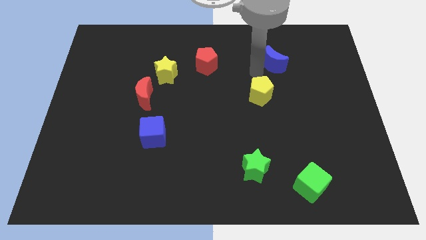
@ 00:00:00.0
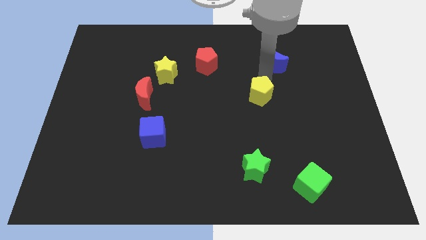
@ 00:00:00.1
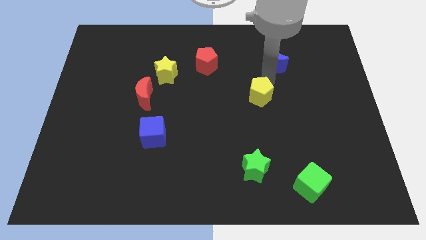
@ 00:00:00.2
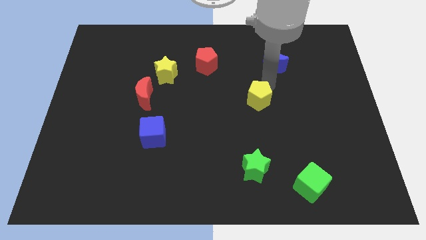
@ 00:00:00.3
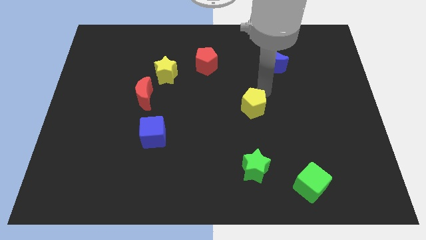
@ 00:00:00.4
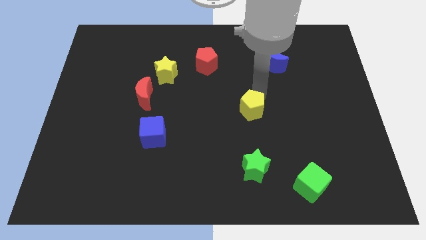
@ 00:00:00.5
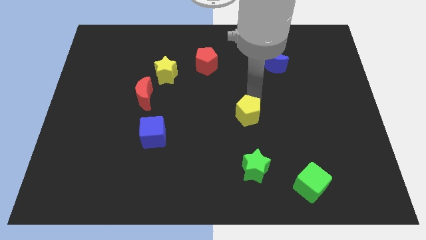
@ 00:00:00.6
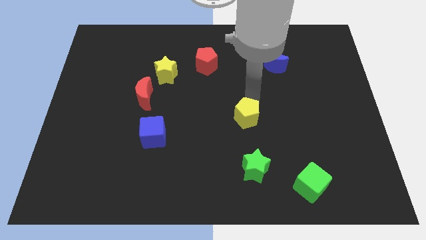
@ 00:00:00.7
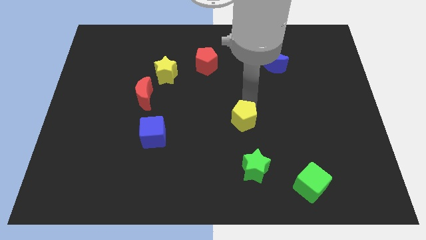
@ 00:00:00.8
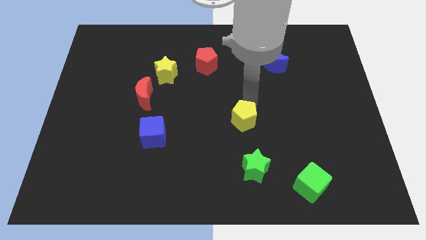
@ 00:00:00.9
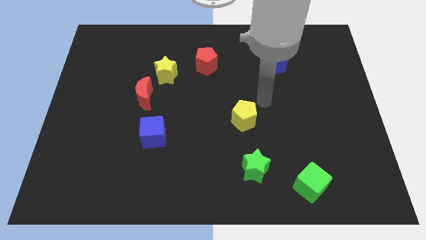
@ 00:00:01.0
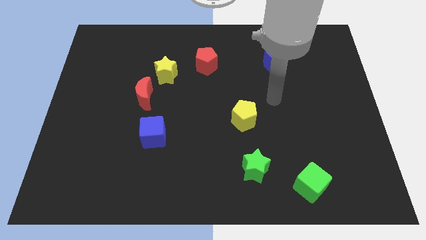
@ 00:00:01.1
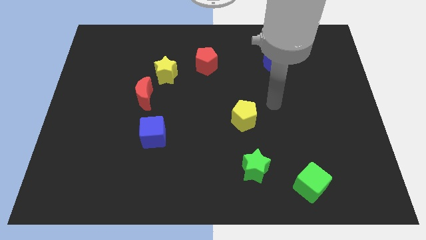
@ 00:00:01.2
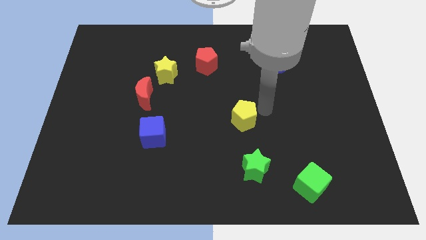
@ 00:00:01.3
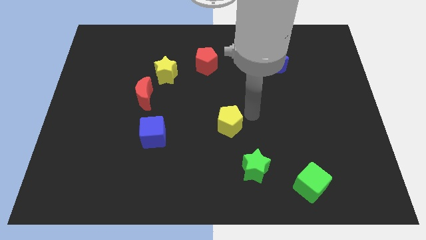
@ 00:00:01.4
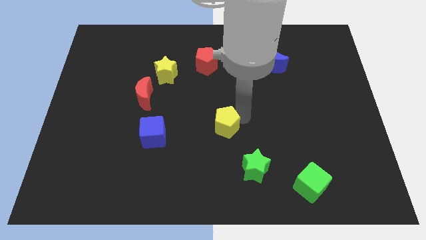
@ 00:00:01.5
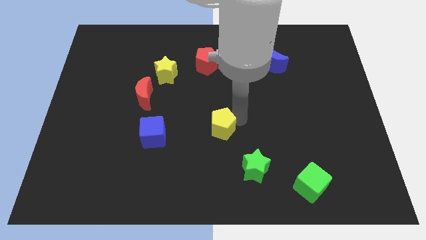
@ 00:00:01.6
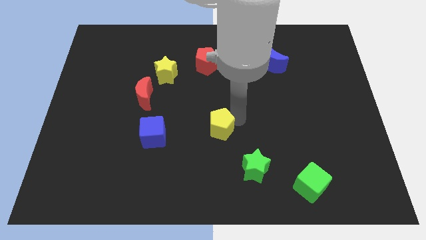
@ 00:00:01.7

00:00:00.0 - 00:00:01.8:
push the yellow pentagon towards the down of the board

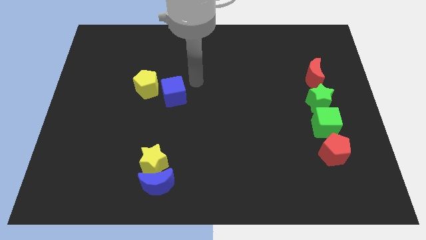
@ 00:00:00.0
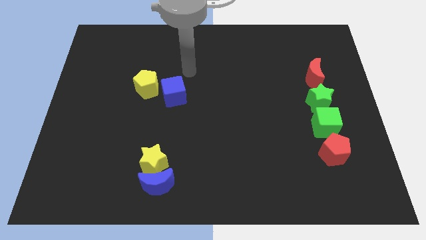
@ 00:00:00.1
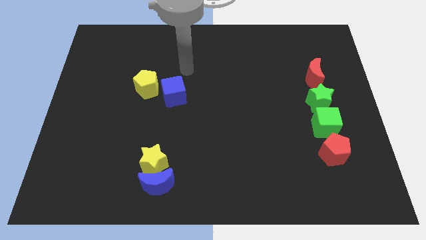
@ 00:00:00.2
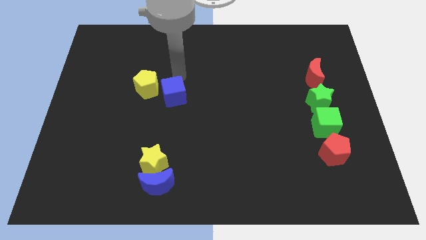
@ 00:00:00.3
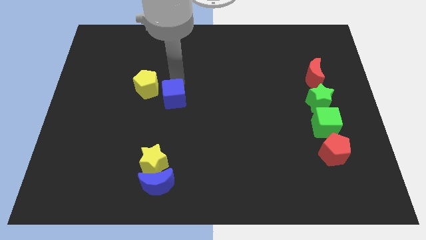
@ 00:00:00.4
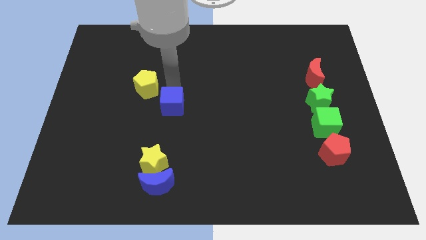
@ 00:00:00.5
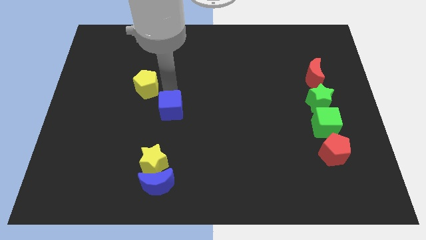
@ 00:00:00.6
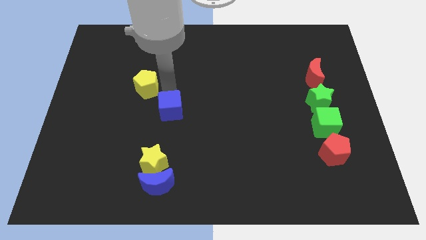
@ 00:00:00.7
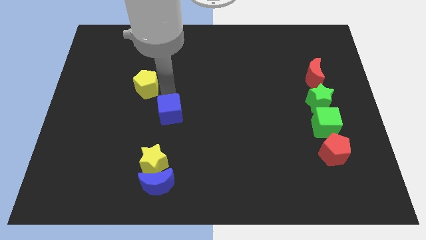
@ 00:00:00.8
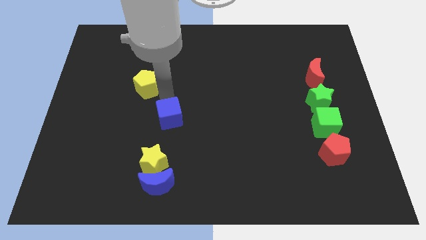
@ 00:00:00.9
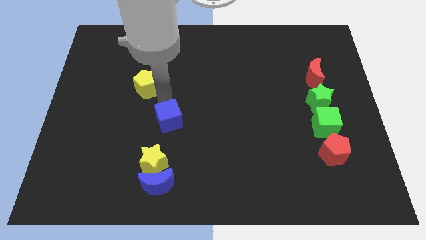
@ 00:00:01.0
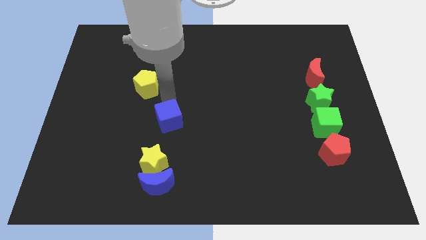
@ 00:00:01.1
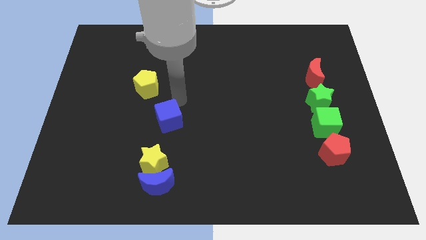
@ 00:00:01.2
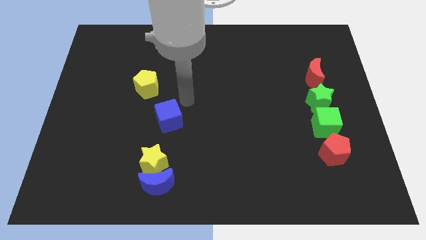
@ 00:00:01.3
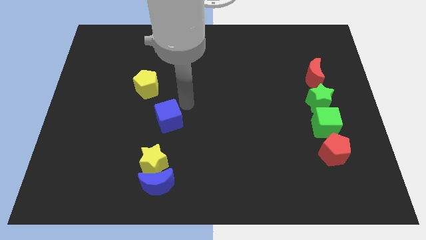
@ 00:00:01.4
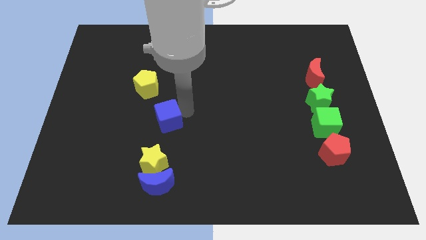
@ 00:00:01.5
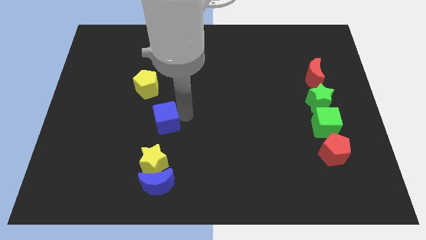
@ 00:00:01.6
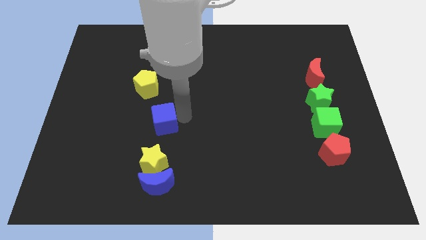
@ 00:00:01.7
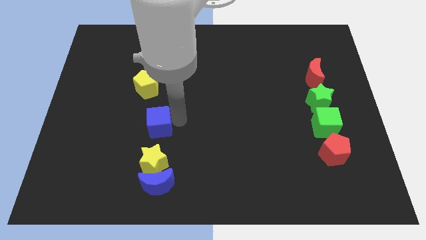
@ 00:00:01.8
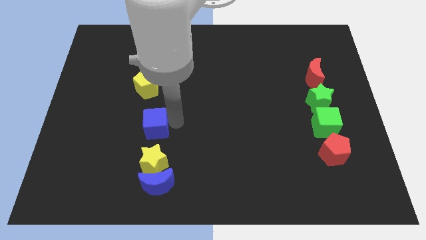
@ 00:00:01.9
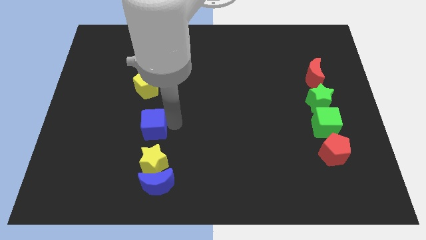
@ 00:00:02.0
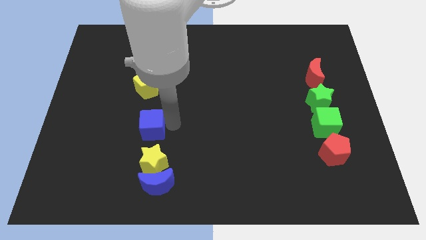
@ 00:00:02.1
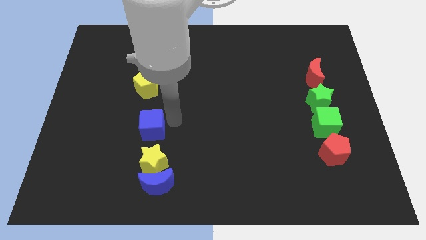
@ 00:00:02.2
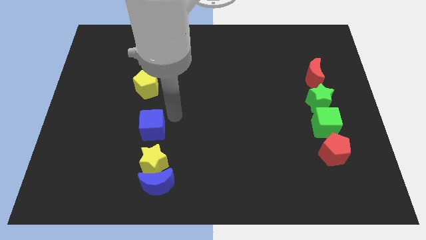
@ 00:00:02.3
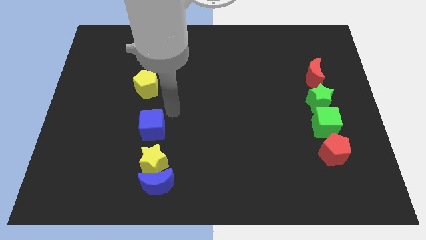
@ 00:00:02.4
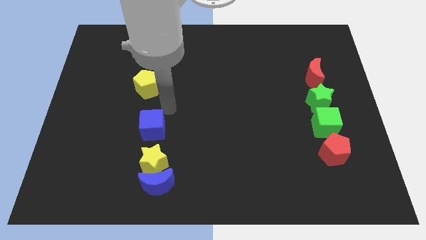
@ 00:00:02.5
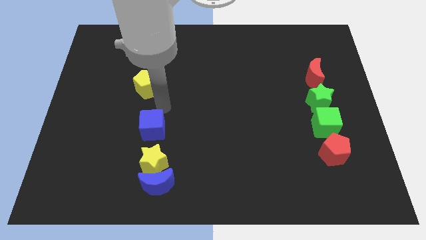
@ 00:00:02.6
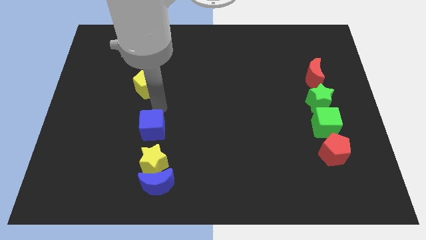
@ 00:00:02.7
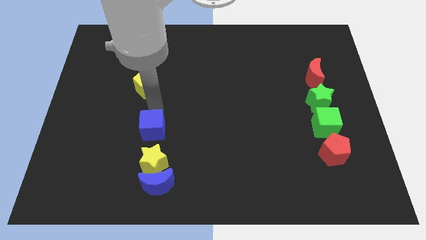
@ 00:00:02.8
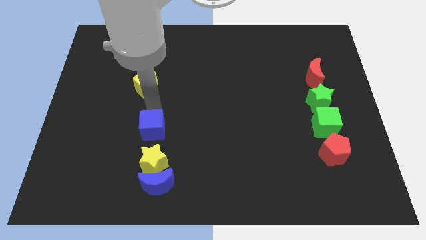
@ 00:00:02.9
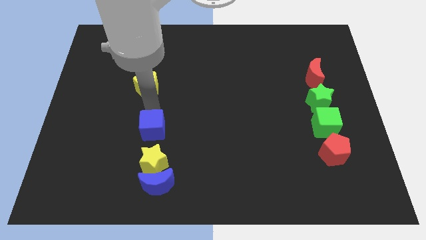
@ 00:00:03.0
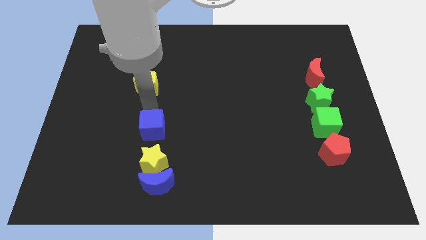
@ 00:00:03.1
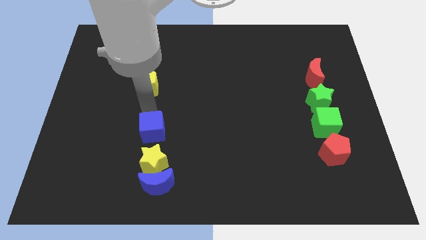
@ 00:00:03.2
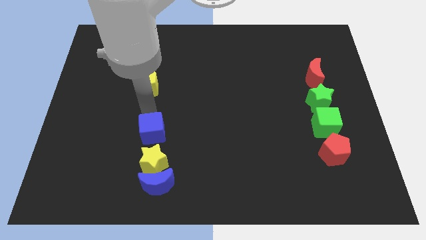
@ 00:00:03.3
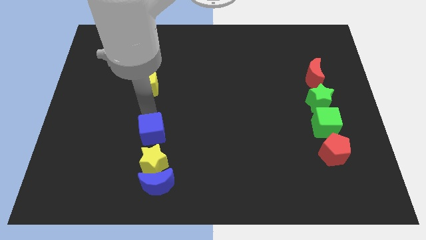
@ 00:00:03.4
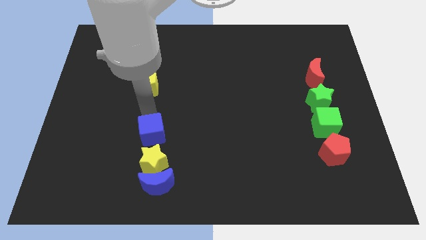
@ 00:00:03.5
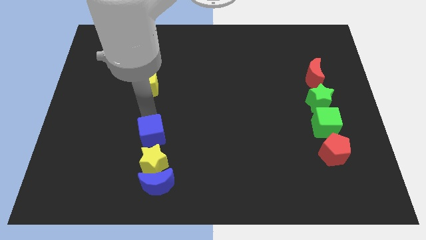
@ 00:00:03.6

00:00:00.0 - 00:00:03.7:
put the blue cube at the top of yellow star

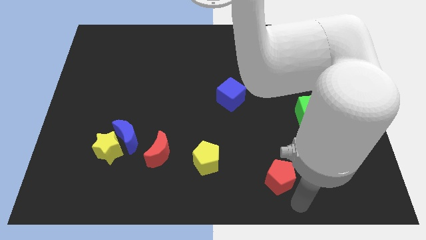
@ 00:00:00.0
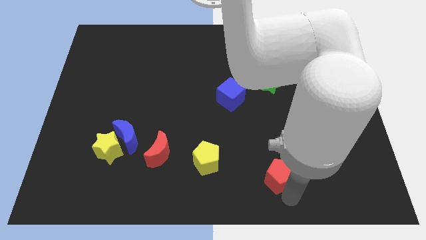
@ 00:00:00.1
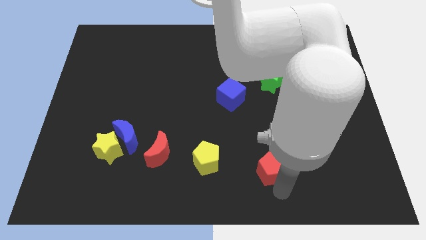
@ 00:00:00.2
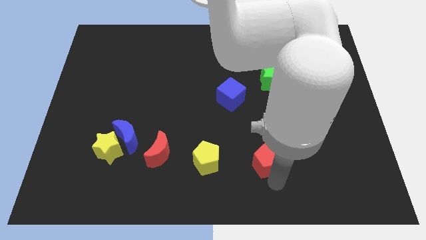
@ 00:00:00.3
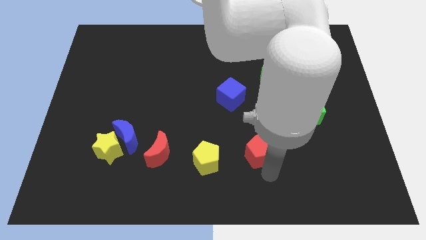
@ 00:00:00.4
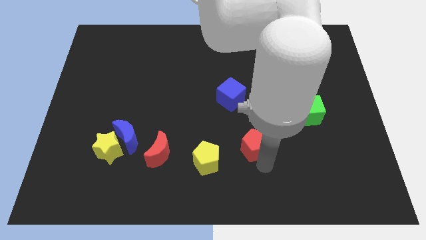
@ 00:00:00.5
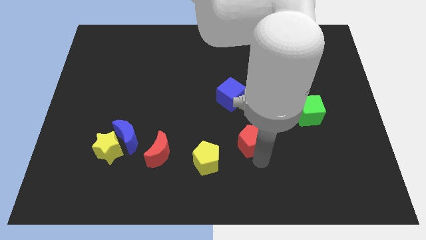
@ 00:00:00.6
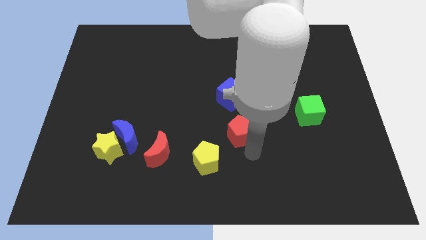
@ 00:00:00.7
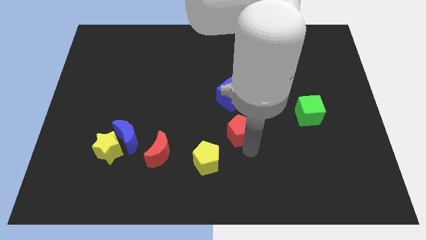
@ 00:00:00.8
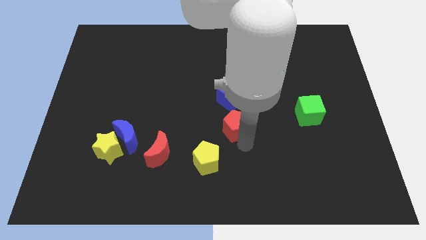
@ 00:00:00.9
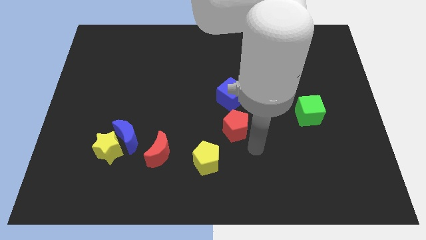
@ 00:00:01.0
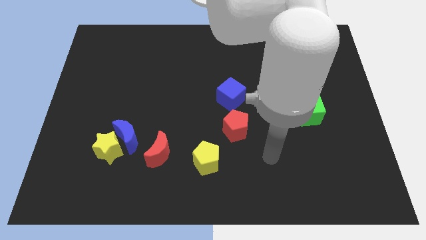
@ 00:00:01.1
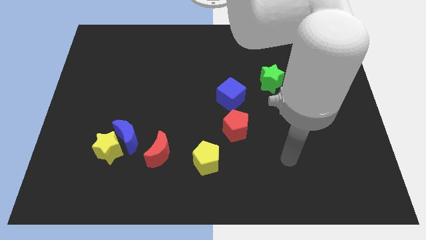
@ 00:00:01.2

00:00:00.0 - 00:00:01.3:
push the red pentagon to the bottom side of the blue cube

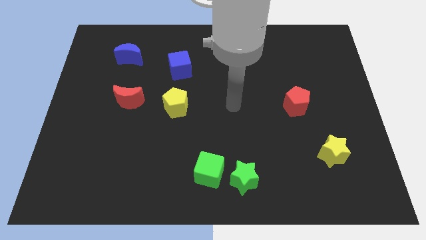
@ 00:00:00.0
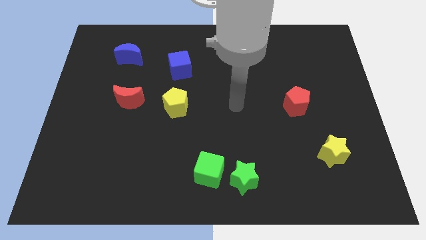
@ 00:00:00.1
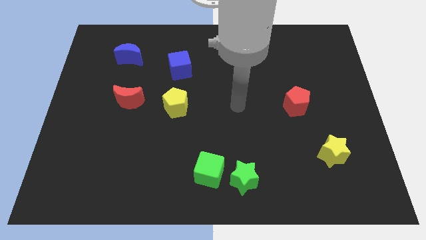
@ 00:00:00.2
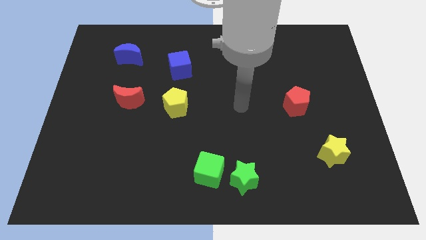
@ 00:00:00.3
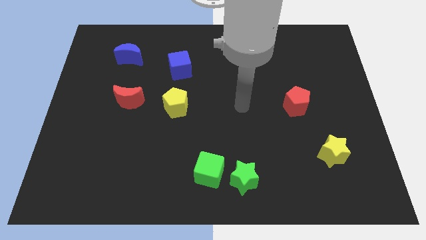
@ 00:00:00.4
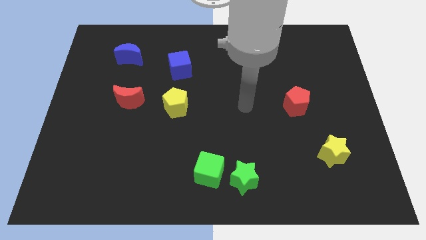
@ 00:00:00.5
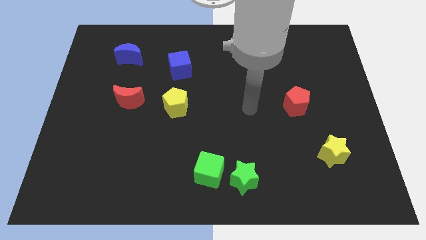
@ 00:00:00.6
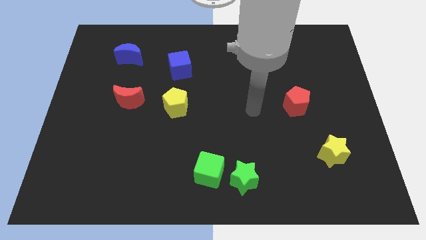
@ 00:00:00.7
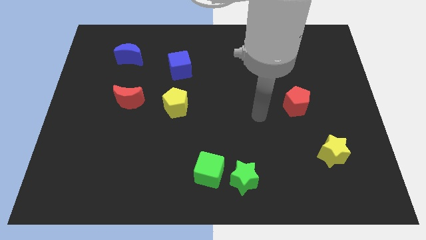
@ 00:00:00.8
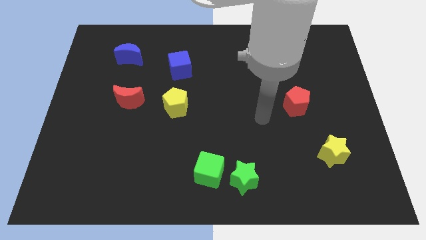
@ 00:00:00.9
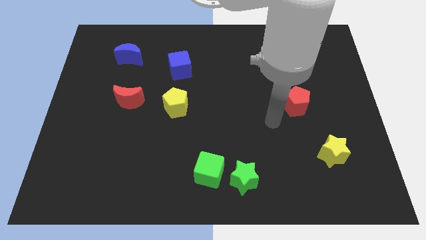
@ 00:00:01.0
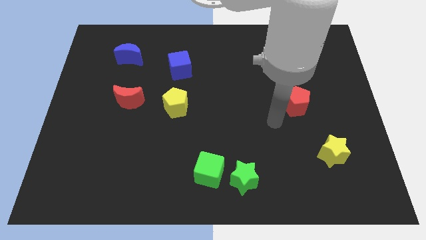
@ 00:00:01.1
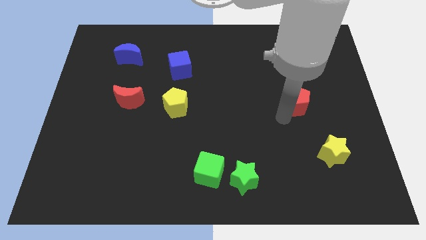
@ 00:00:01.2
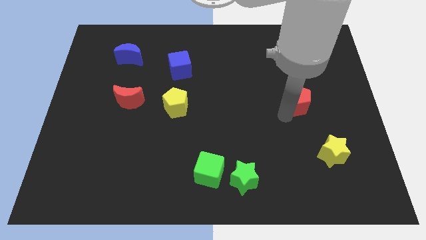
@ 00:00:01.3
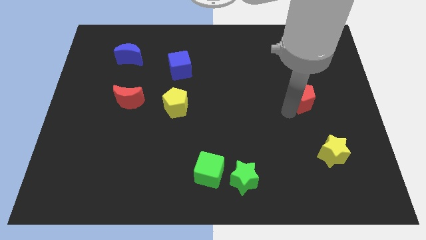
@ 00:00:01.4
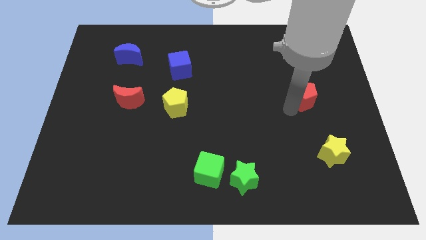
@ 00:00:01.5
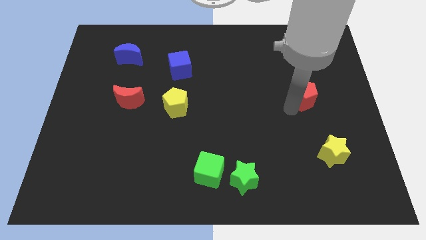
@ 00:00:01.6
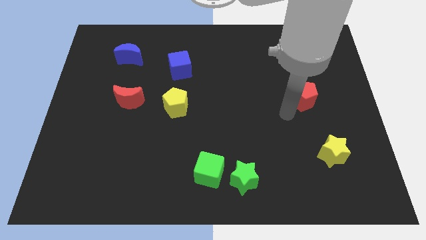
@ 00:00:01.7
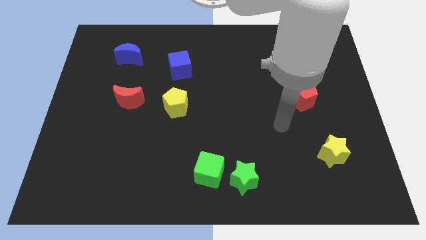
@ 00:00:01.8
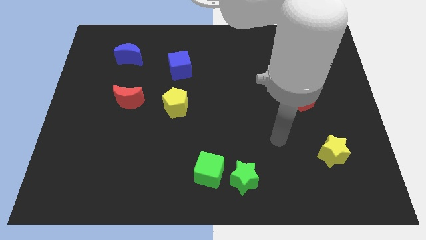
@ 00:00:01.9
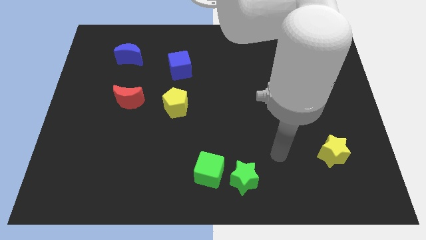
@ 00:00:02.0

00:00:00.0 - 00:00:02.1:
push the red pentagon upwards to the board
